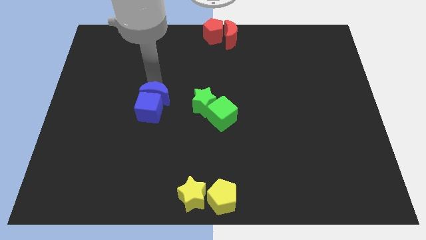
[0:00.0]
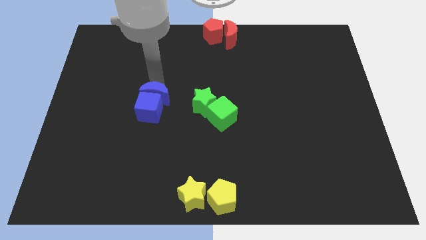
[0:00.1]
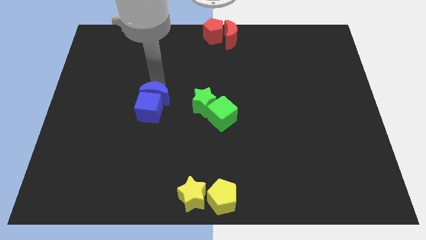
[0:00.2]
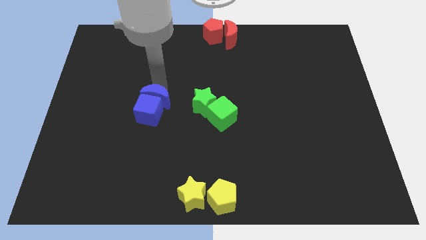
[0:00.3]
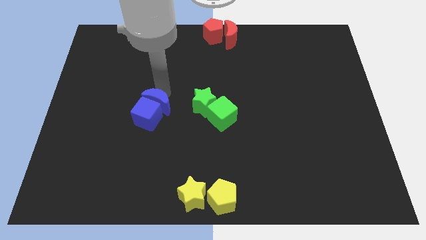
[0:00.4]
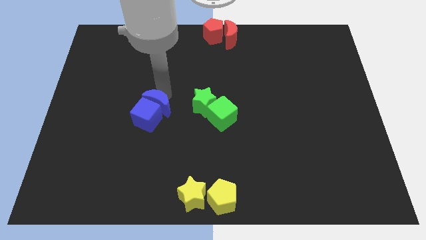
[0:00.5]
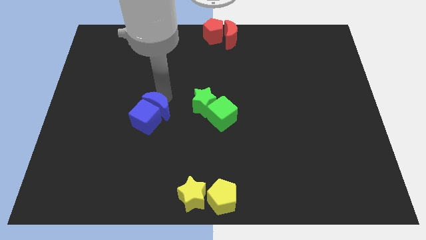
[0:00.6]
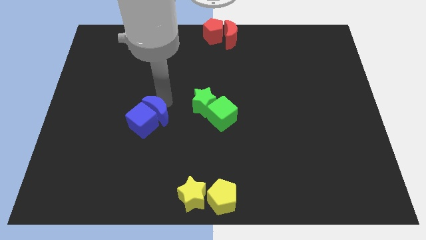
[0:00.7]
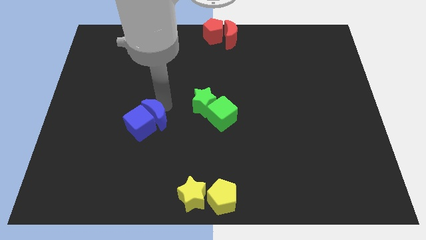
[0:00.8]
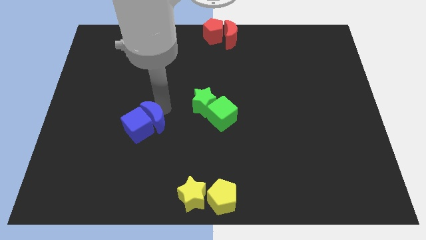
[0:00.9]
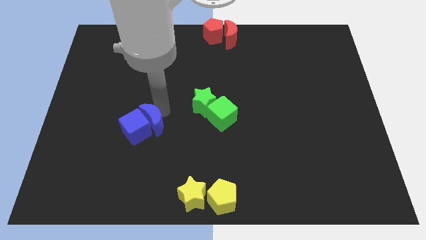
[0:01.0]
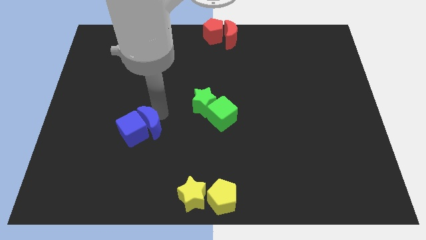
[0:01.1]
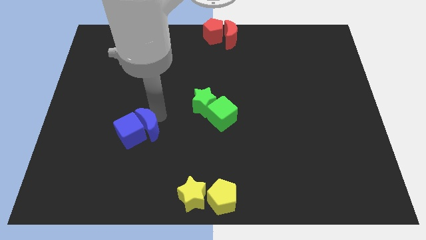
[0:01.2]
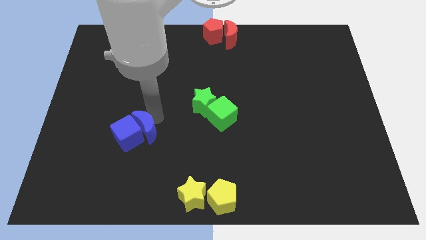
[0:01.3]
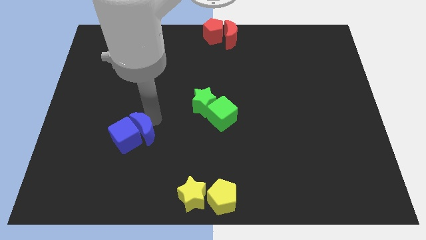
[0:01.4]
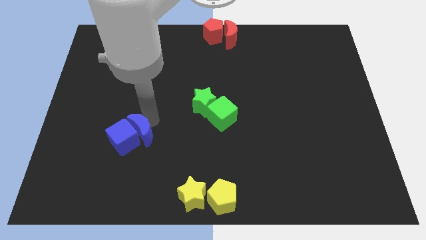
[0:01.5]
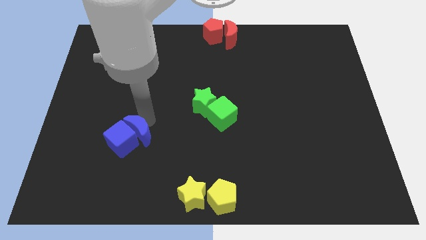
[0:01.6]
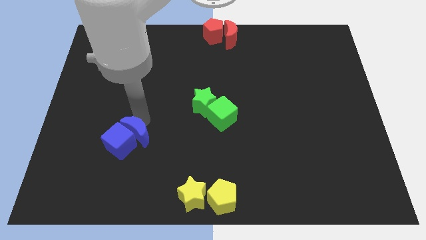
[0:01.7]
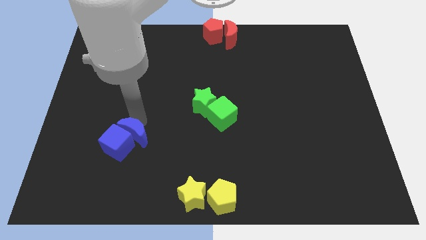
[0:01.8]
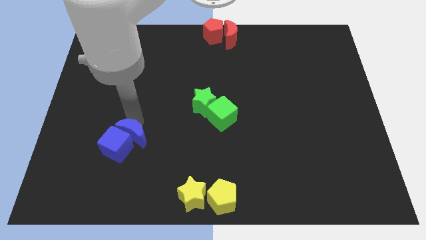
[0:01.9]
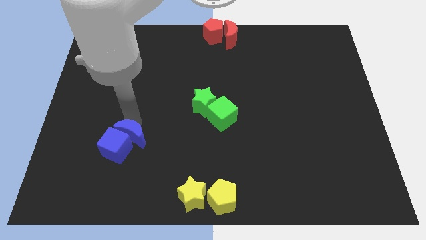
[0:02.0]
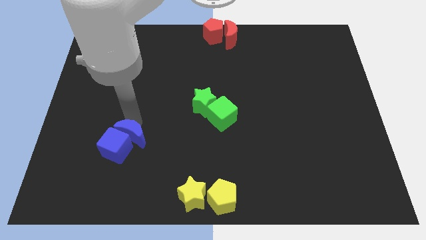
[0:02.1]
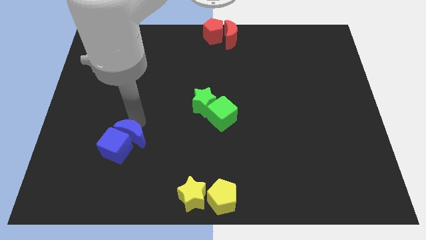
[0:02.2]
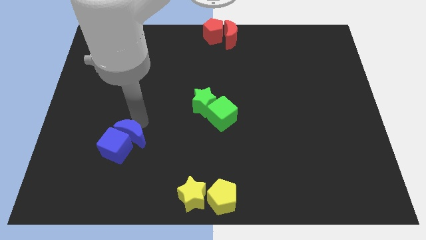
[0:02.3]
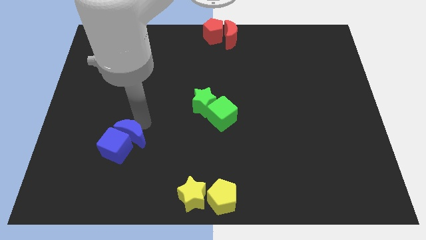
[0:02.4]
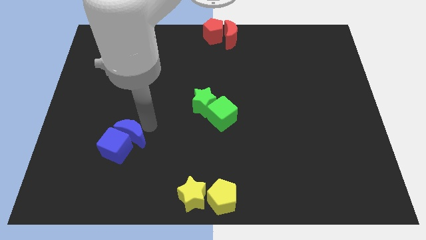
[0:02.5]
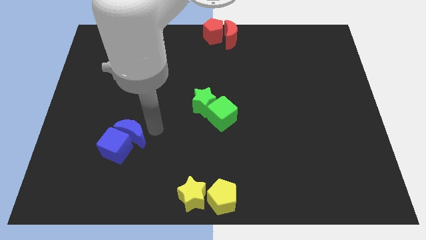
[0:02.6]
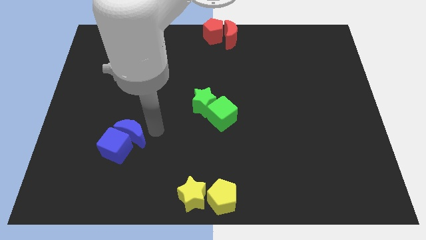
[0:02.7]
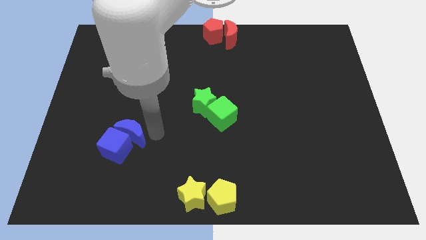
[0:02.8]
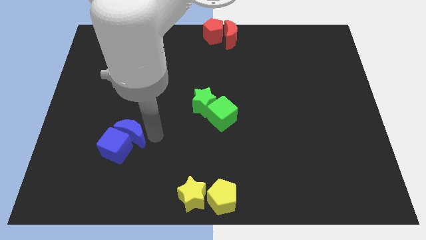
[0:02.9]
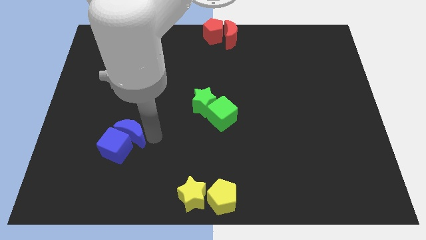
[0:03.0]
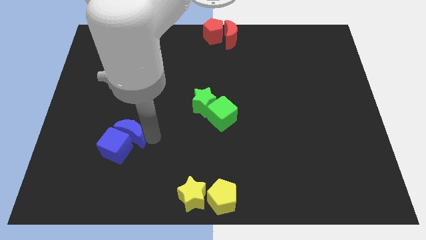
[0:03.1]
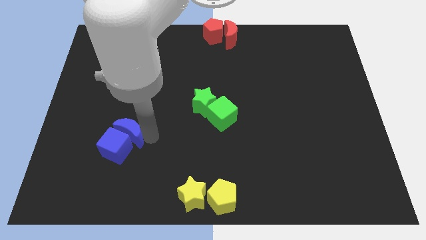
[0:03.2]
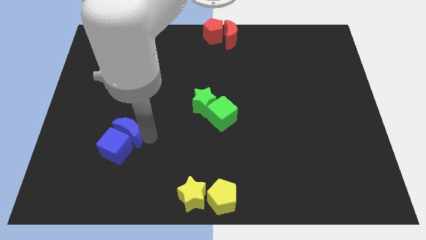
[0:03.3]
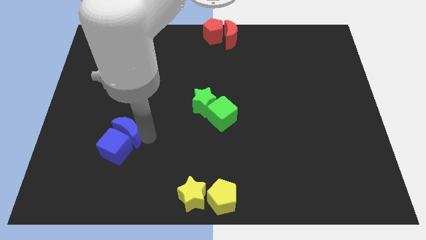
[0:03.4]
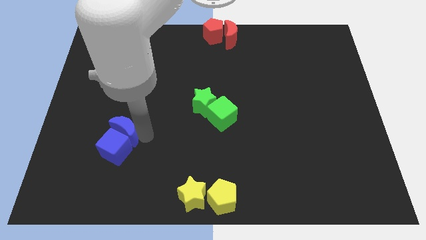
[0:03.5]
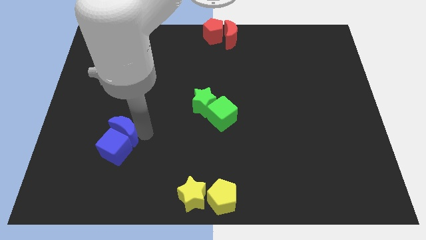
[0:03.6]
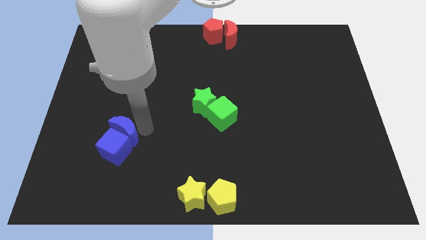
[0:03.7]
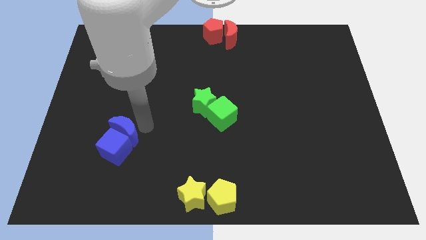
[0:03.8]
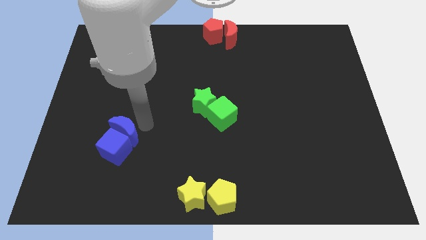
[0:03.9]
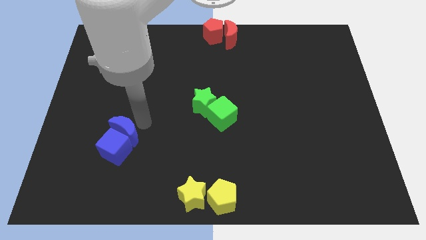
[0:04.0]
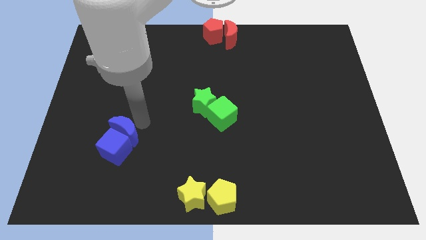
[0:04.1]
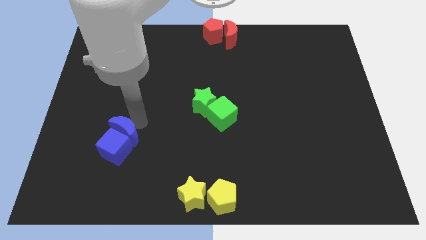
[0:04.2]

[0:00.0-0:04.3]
push the blue cube with the blue crescent

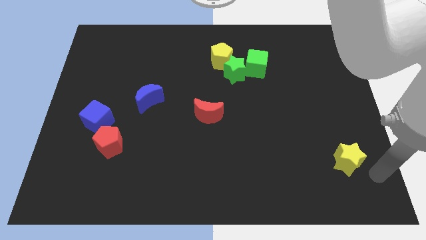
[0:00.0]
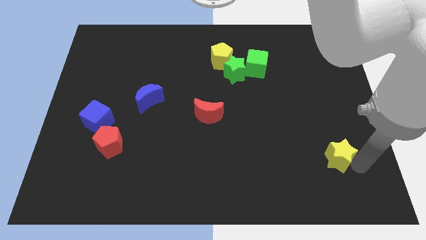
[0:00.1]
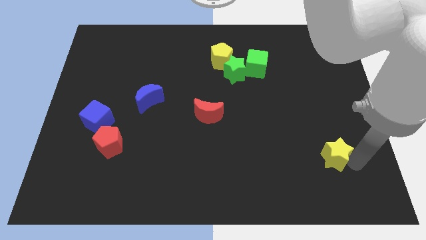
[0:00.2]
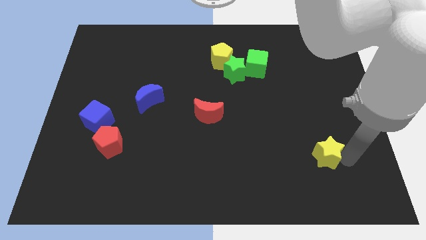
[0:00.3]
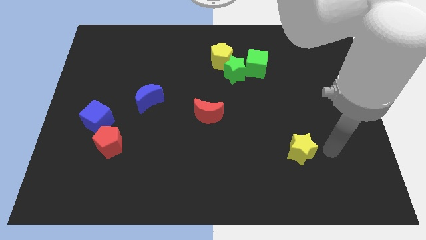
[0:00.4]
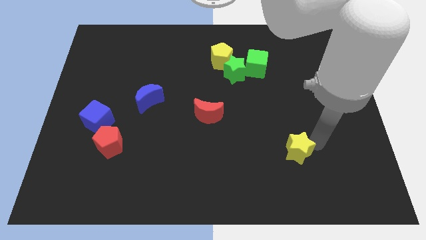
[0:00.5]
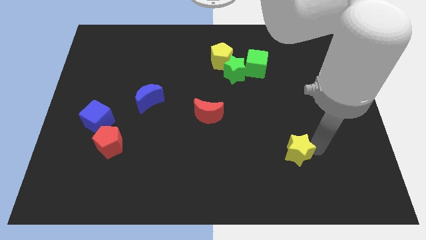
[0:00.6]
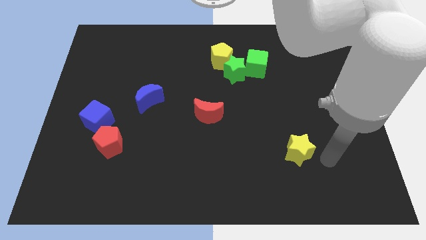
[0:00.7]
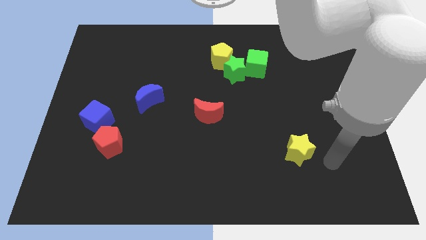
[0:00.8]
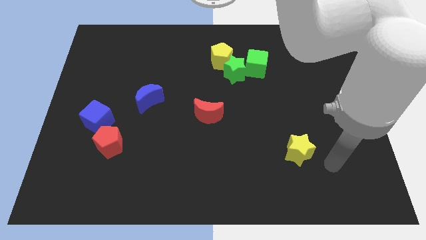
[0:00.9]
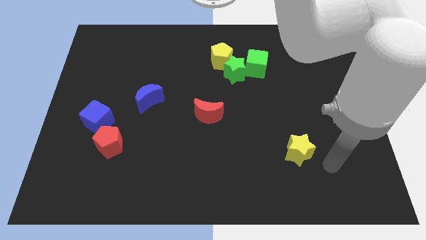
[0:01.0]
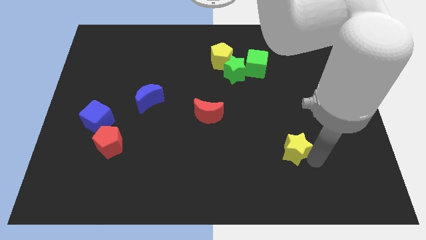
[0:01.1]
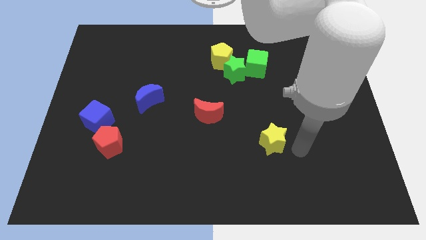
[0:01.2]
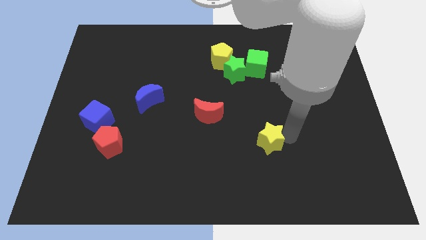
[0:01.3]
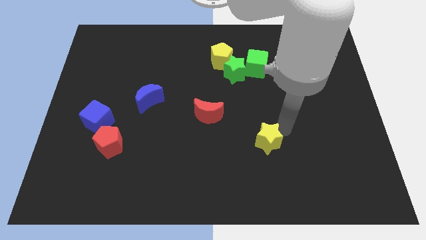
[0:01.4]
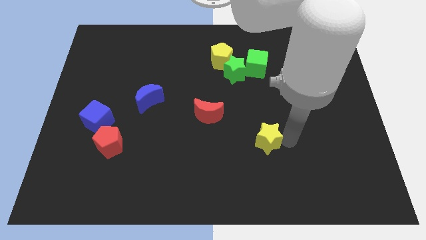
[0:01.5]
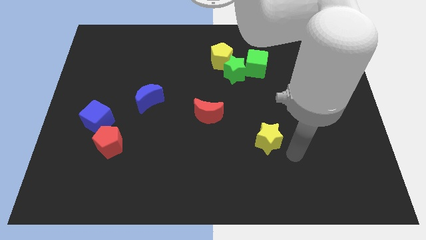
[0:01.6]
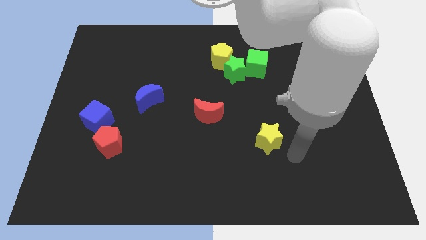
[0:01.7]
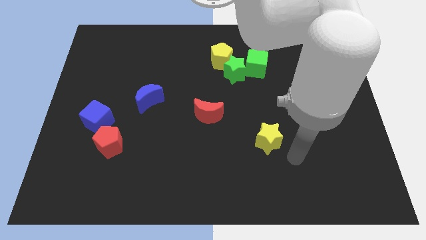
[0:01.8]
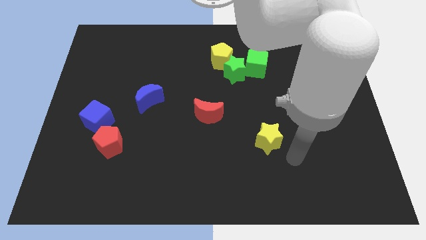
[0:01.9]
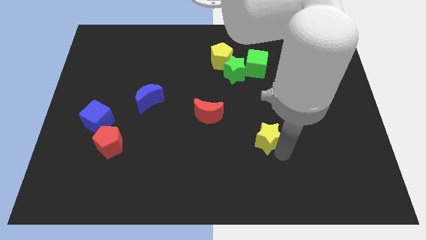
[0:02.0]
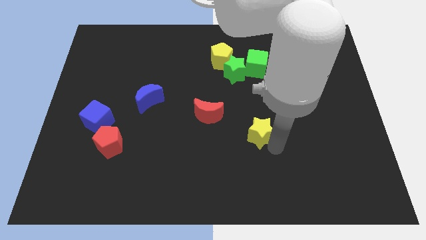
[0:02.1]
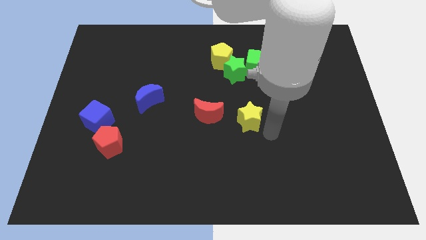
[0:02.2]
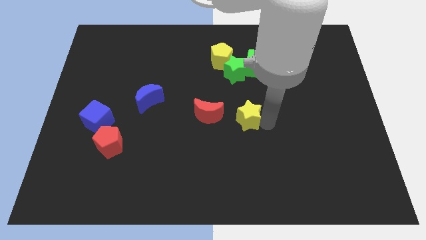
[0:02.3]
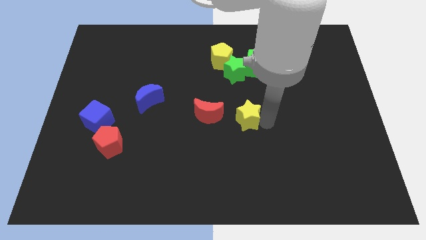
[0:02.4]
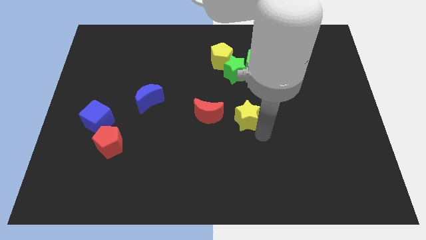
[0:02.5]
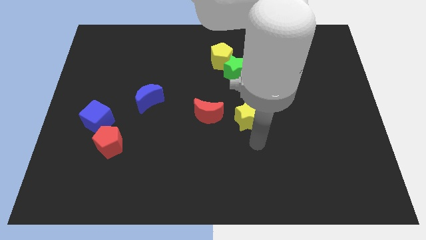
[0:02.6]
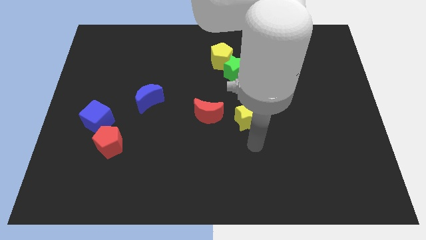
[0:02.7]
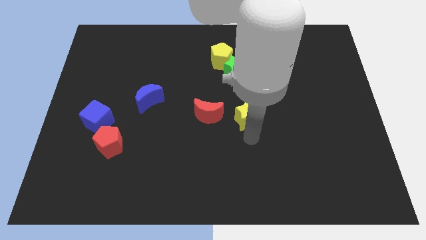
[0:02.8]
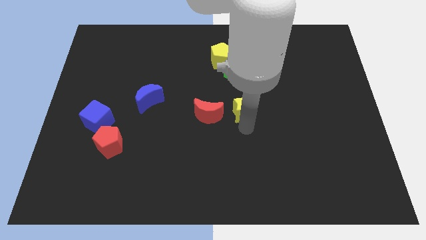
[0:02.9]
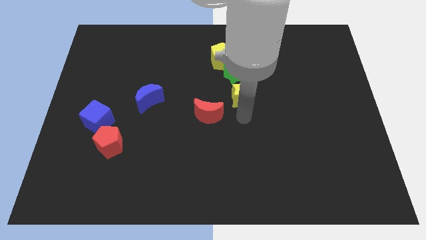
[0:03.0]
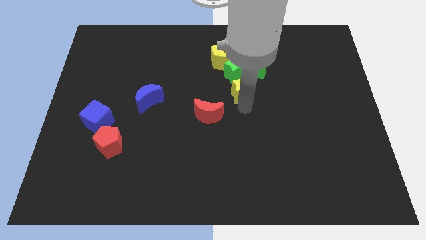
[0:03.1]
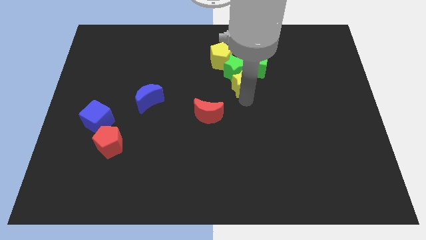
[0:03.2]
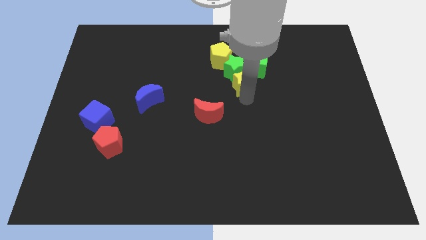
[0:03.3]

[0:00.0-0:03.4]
push the yellow star into the green star

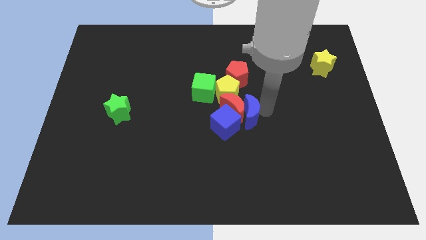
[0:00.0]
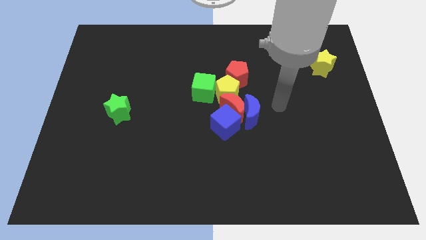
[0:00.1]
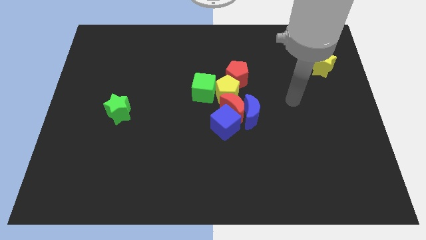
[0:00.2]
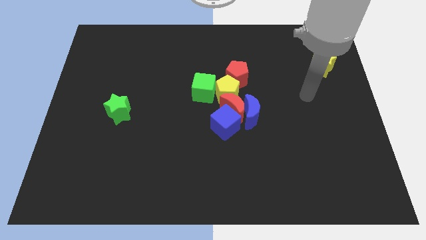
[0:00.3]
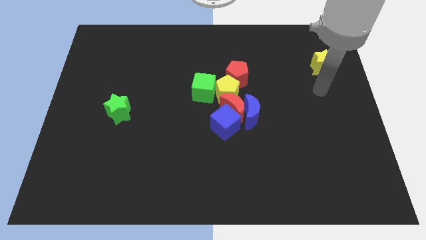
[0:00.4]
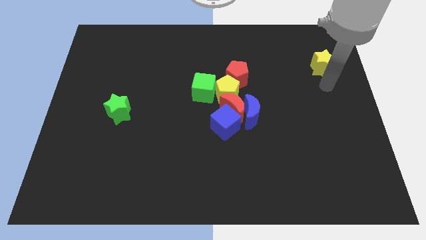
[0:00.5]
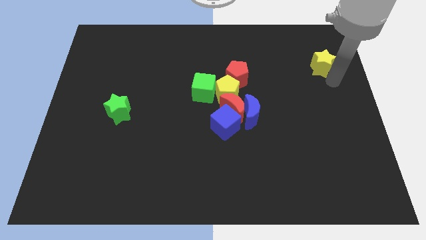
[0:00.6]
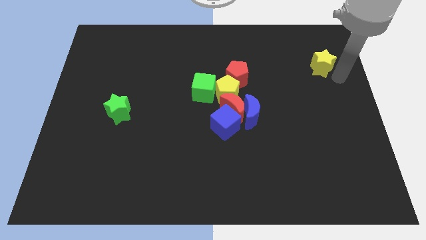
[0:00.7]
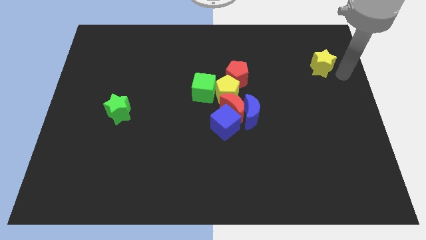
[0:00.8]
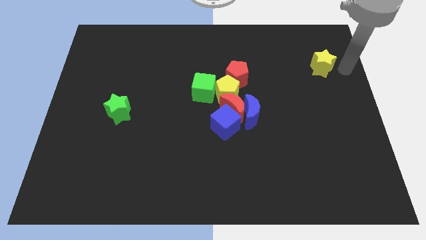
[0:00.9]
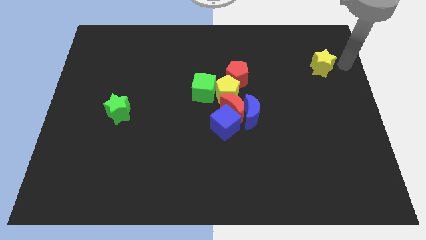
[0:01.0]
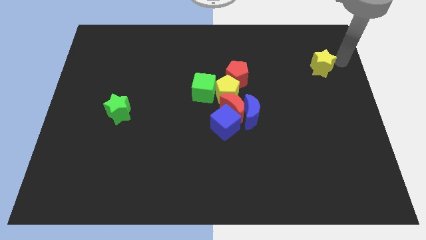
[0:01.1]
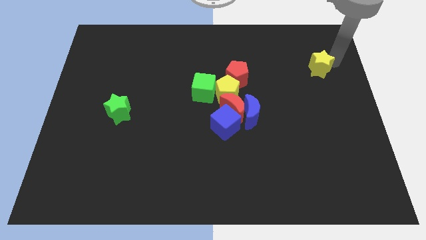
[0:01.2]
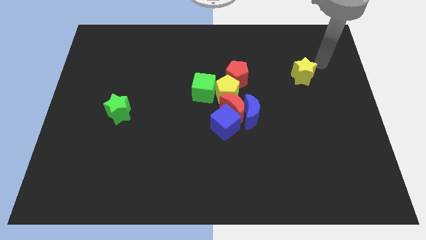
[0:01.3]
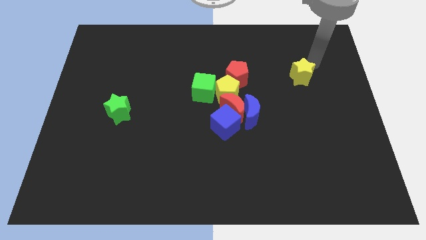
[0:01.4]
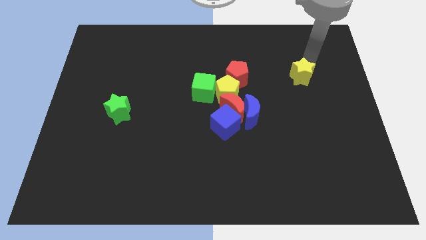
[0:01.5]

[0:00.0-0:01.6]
put the yellow star horizontally at the right side of the red pentagon
